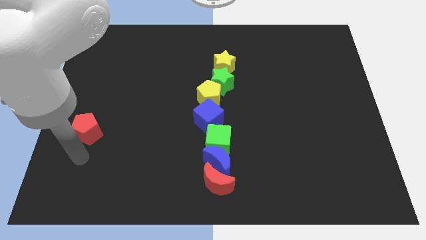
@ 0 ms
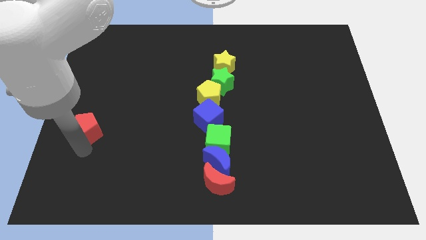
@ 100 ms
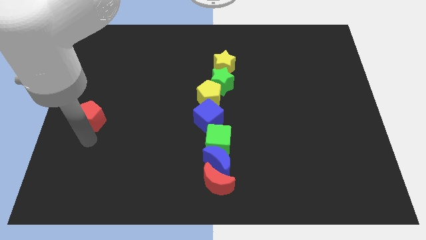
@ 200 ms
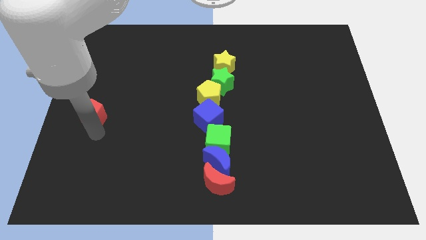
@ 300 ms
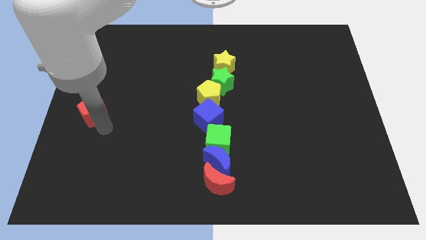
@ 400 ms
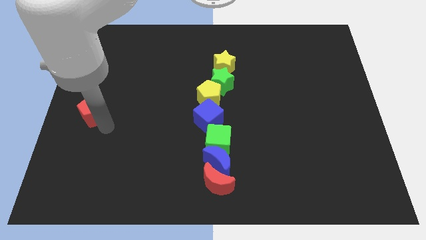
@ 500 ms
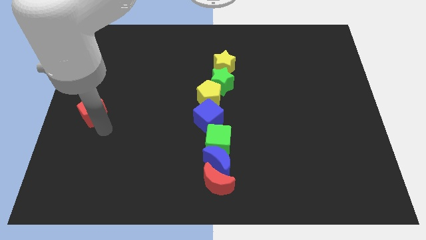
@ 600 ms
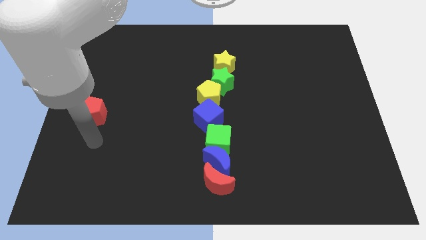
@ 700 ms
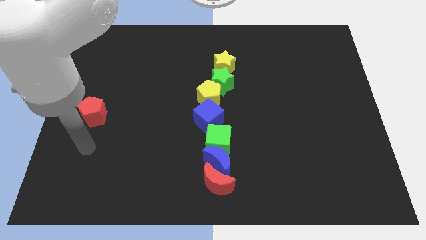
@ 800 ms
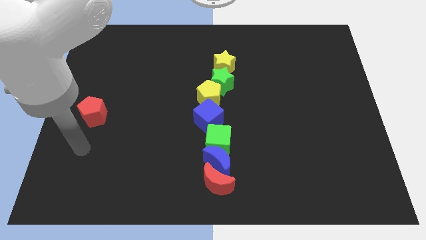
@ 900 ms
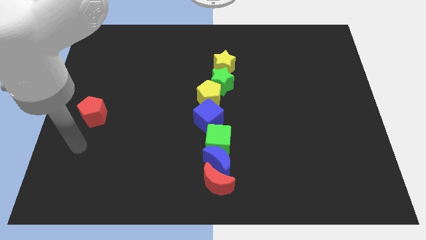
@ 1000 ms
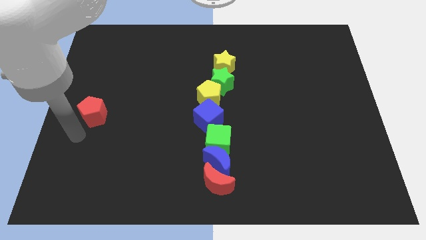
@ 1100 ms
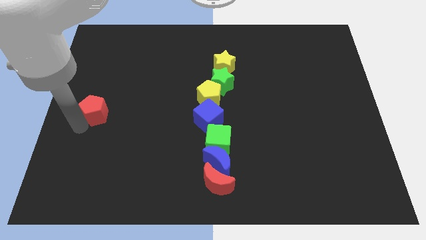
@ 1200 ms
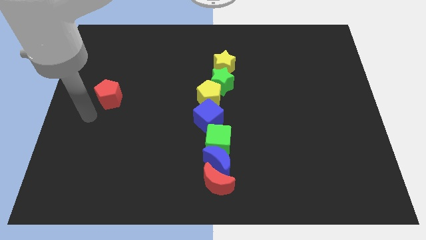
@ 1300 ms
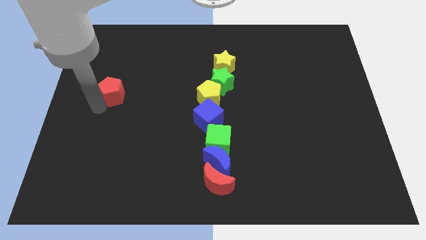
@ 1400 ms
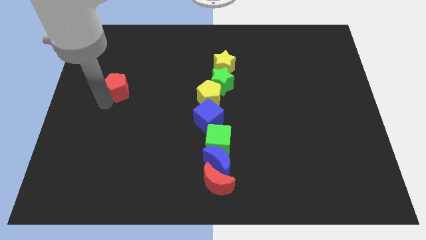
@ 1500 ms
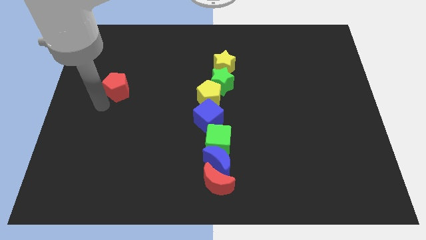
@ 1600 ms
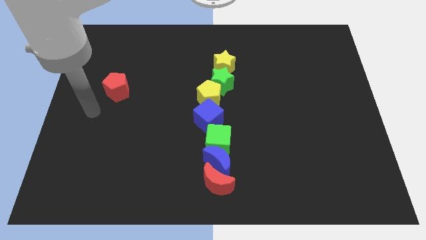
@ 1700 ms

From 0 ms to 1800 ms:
slide the red pentagon towards up

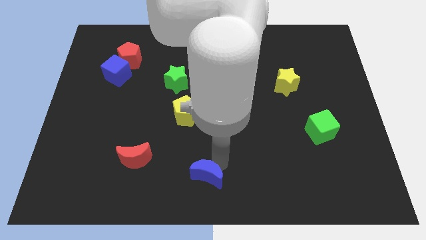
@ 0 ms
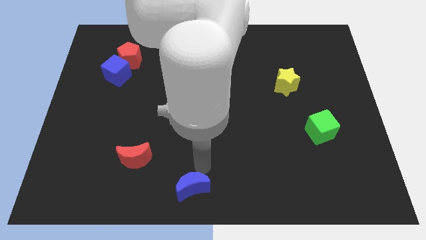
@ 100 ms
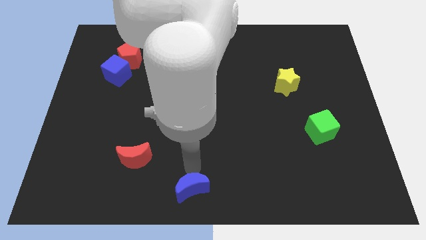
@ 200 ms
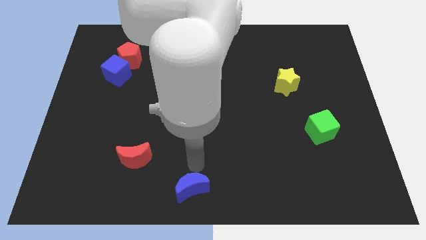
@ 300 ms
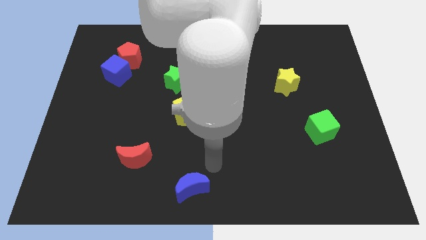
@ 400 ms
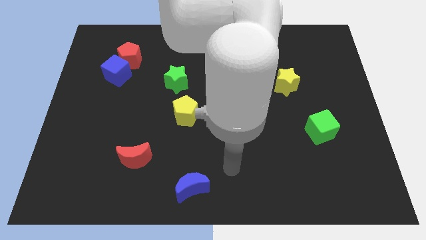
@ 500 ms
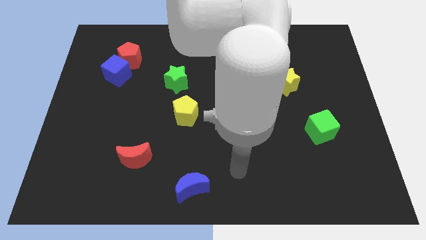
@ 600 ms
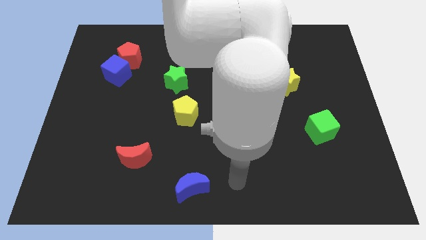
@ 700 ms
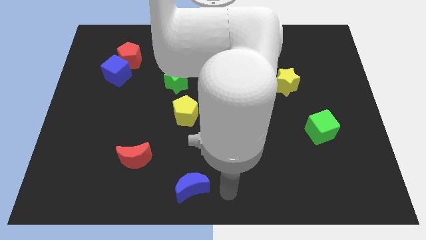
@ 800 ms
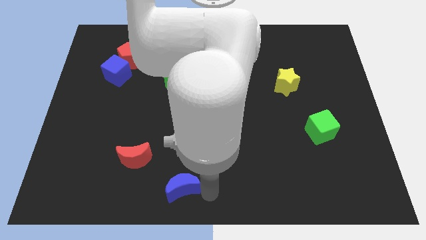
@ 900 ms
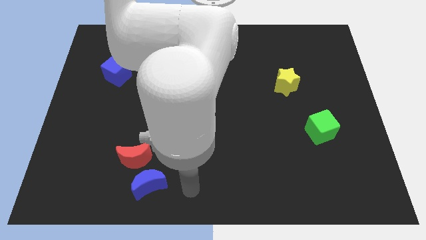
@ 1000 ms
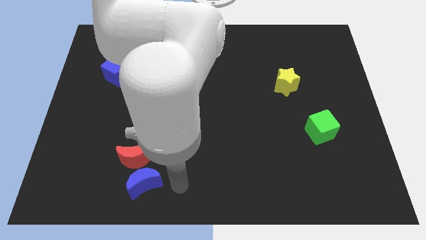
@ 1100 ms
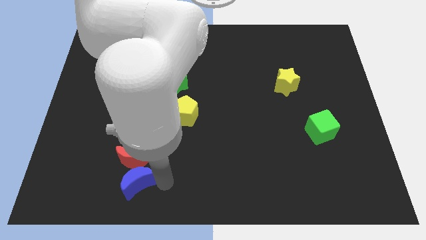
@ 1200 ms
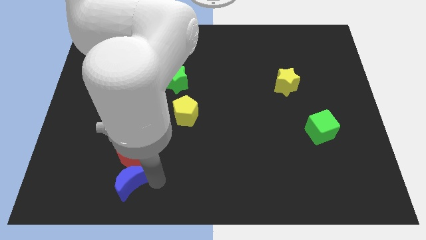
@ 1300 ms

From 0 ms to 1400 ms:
push the blue moon below the red moon

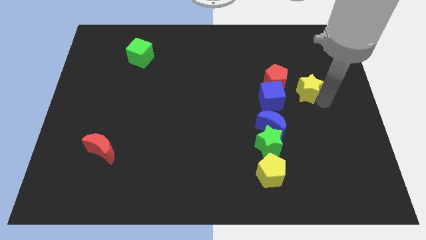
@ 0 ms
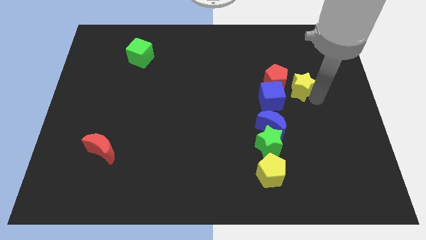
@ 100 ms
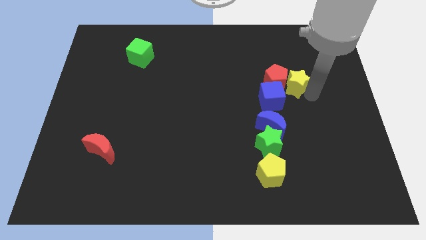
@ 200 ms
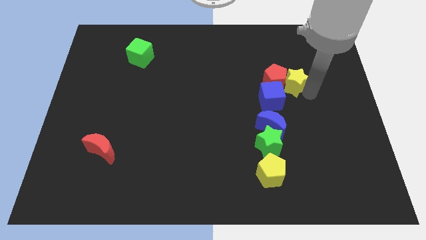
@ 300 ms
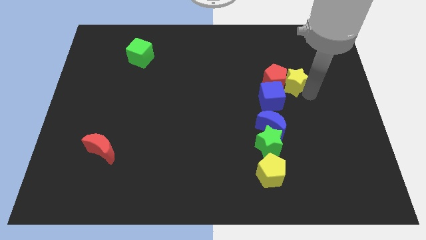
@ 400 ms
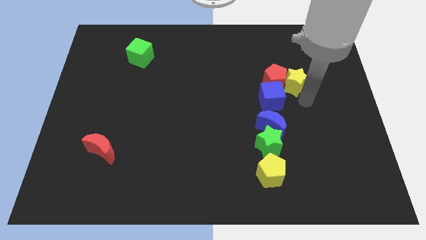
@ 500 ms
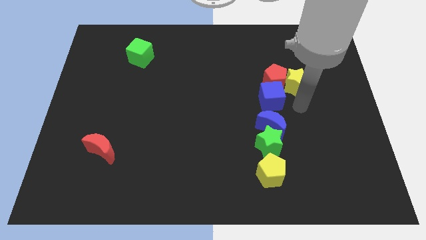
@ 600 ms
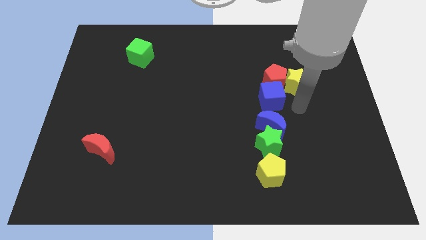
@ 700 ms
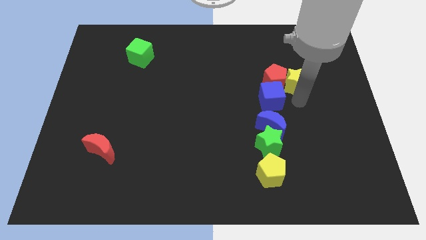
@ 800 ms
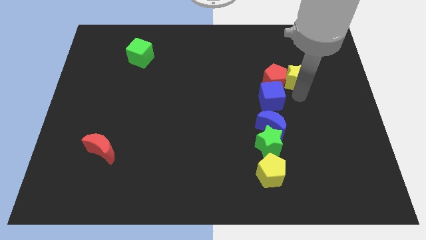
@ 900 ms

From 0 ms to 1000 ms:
move yellow star into red pentagon

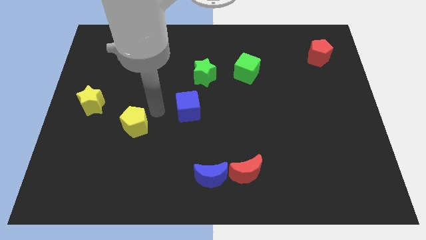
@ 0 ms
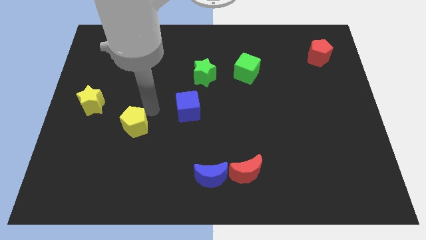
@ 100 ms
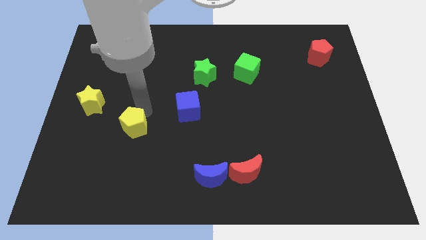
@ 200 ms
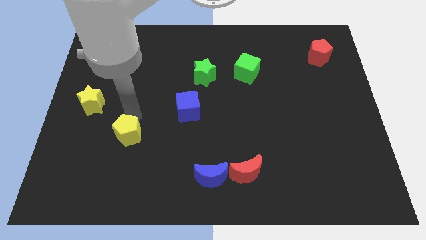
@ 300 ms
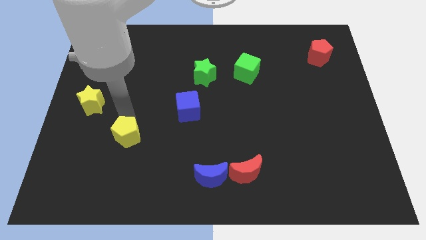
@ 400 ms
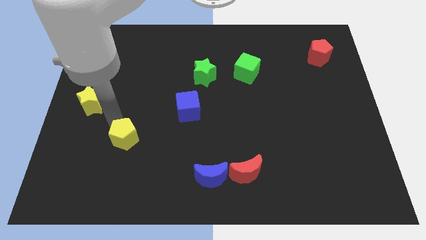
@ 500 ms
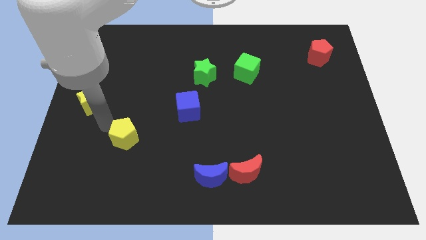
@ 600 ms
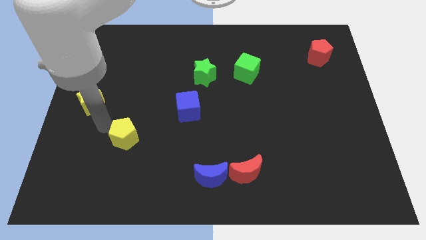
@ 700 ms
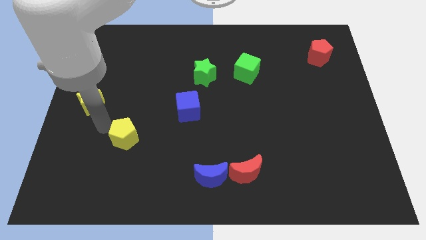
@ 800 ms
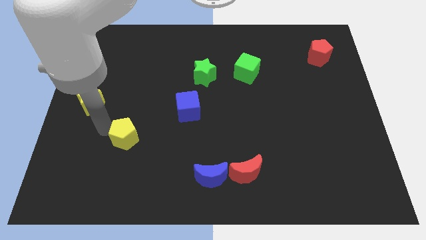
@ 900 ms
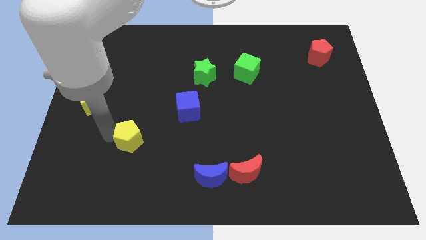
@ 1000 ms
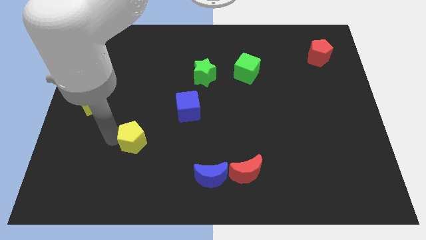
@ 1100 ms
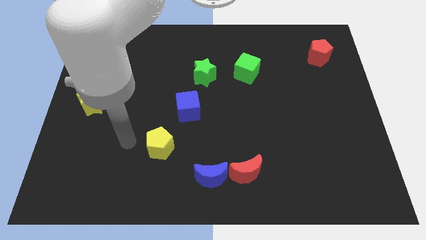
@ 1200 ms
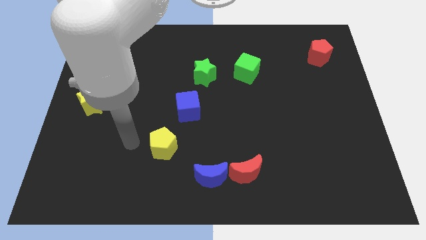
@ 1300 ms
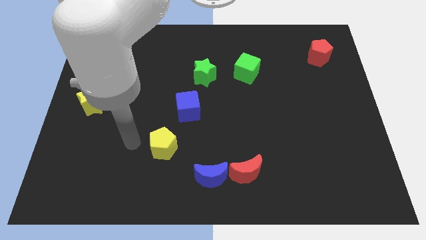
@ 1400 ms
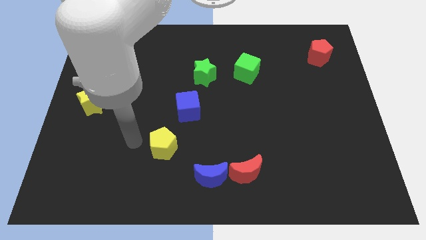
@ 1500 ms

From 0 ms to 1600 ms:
place the yellow pentagon to the bottom left of the blue cube

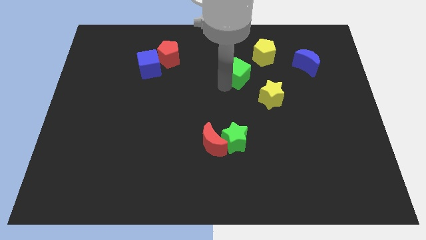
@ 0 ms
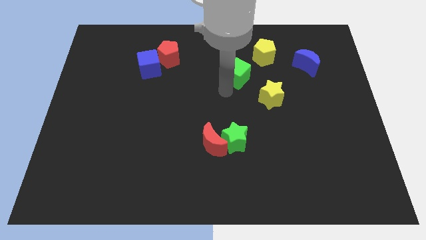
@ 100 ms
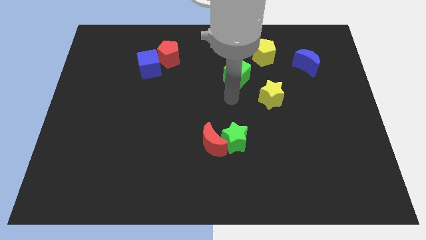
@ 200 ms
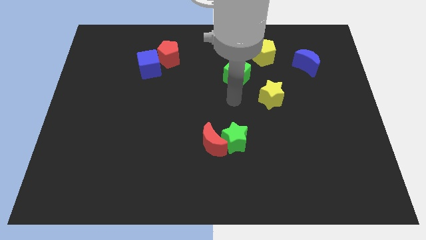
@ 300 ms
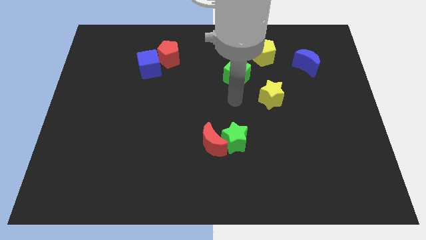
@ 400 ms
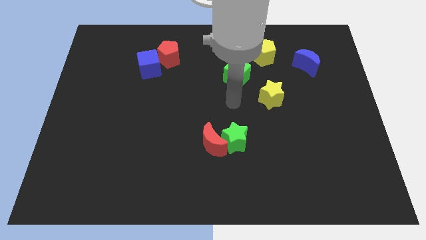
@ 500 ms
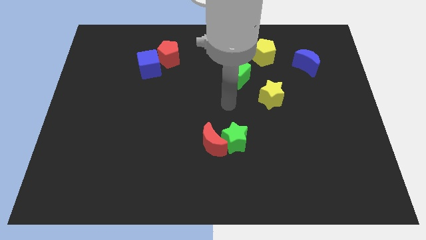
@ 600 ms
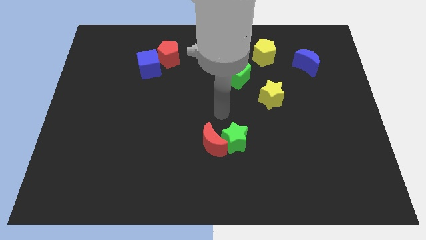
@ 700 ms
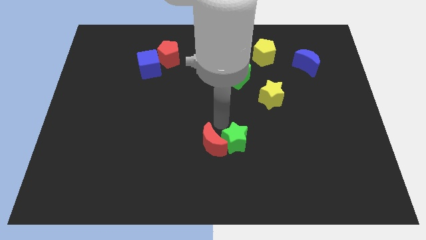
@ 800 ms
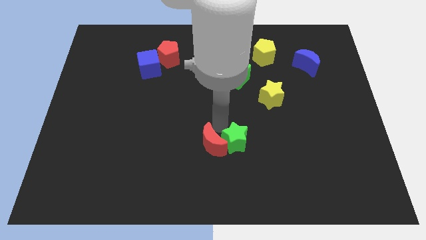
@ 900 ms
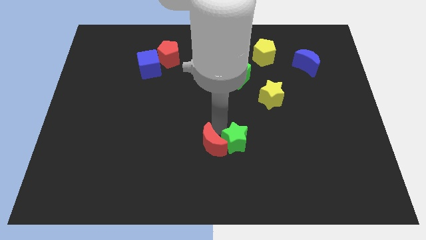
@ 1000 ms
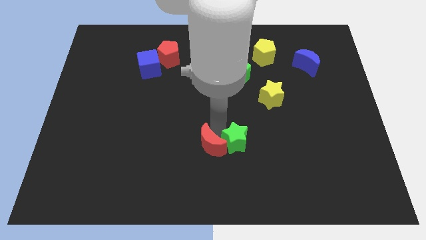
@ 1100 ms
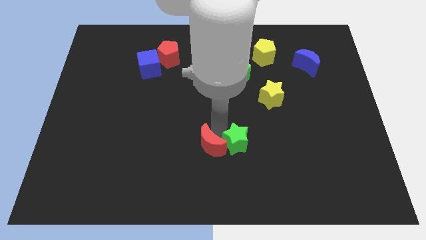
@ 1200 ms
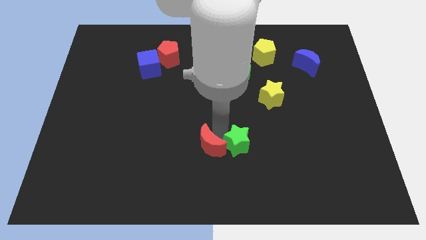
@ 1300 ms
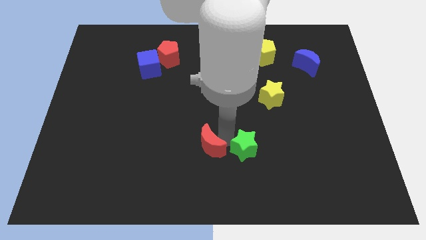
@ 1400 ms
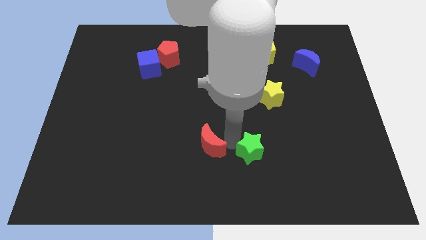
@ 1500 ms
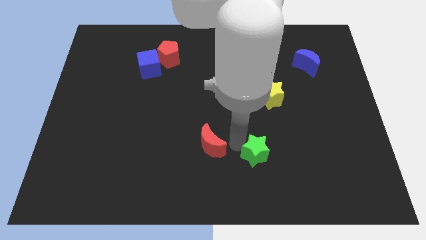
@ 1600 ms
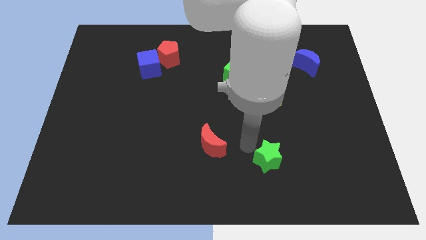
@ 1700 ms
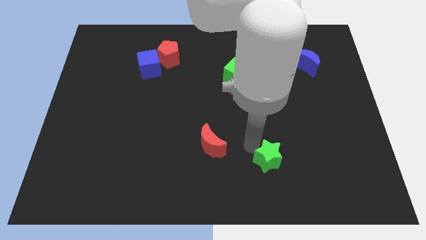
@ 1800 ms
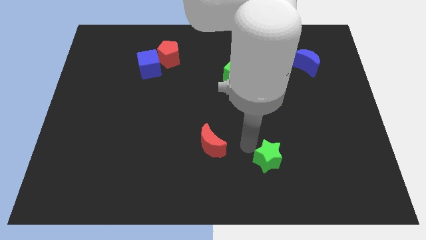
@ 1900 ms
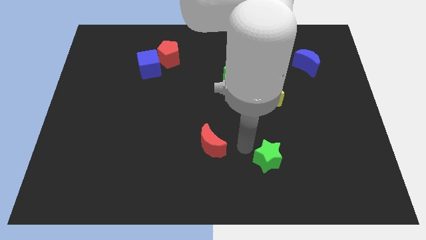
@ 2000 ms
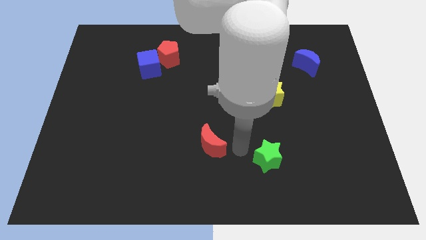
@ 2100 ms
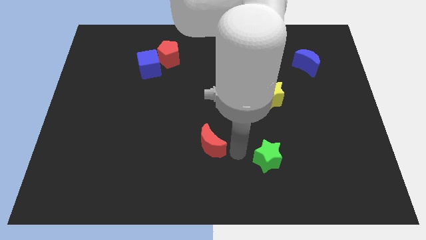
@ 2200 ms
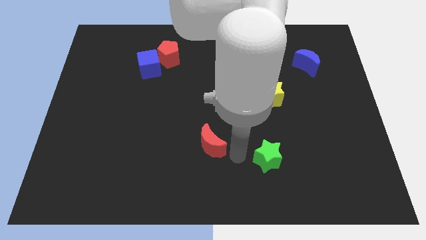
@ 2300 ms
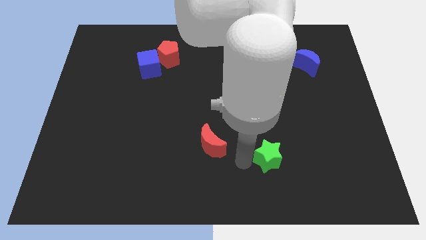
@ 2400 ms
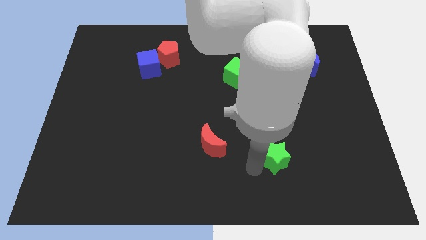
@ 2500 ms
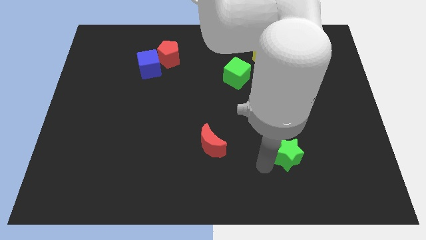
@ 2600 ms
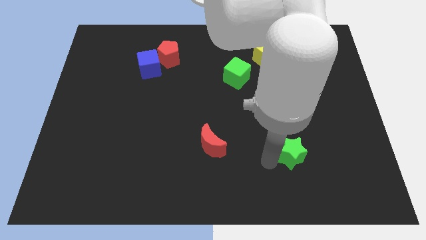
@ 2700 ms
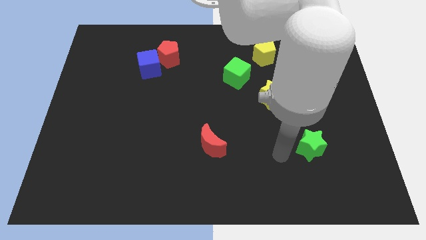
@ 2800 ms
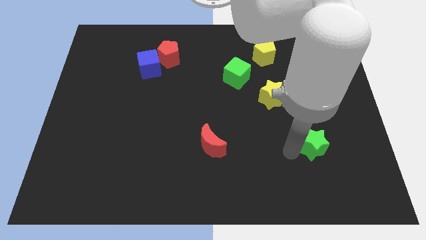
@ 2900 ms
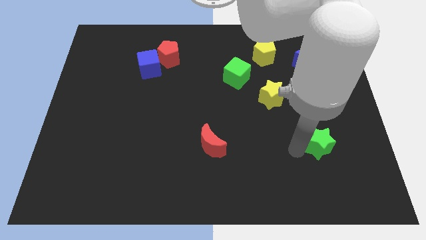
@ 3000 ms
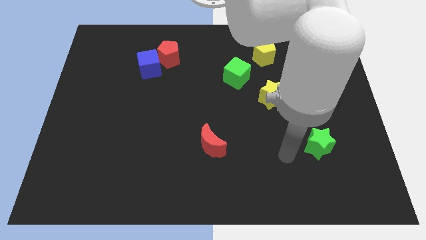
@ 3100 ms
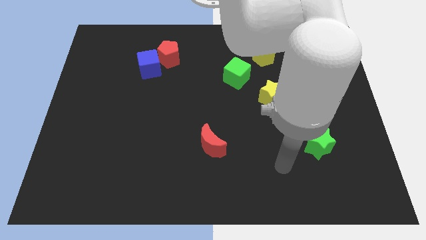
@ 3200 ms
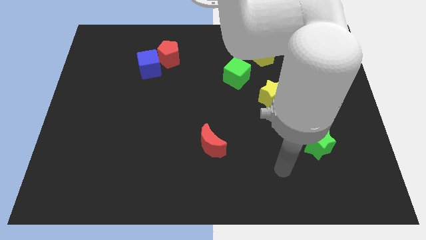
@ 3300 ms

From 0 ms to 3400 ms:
move the green star towards the right side
